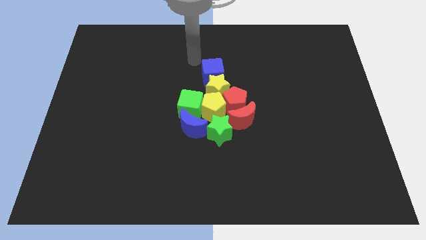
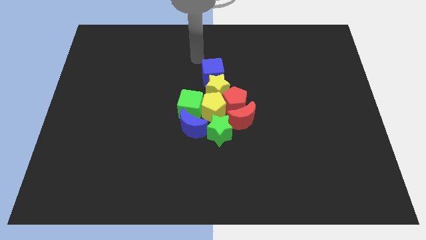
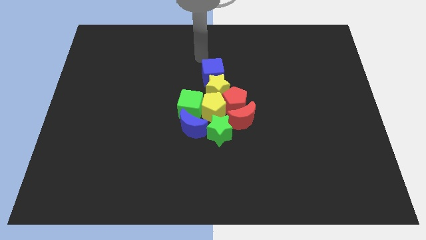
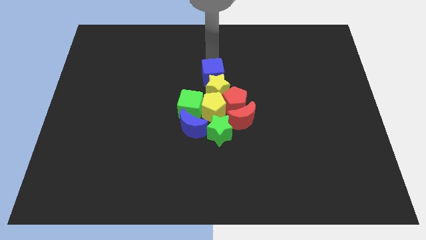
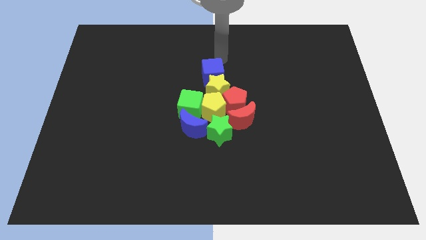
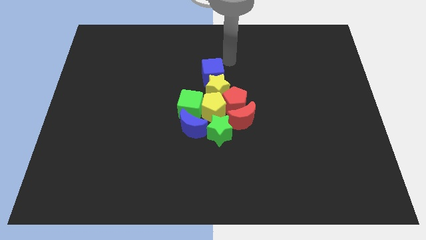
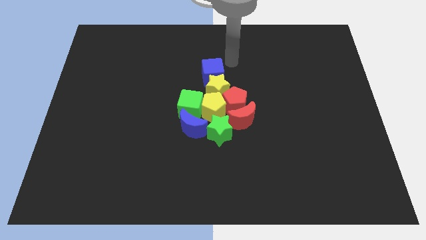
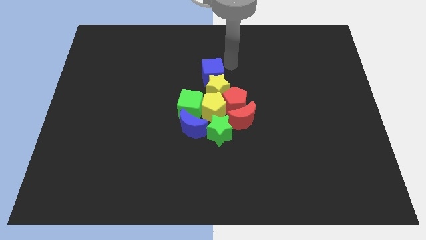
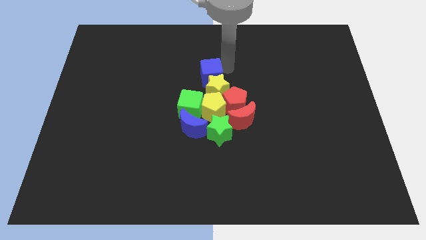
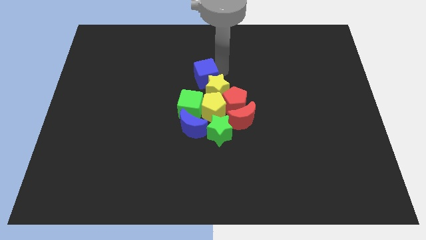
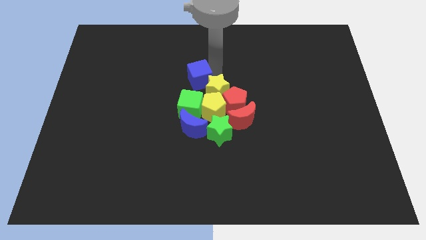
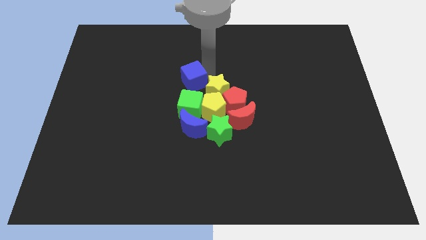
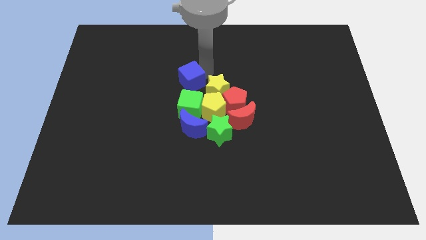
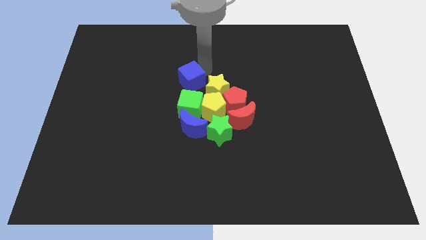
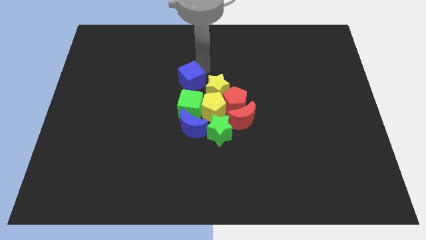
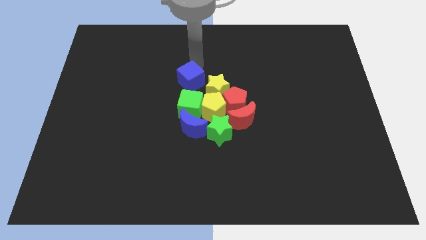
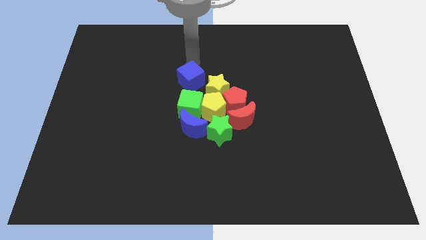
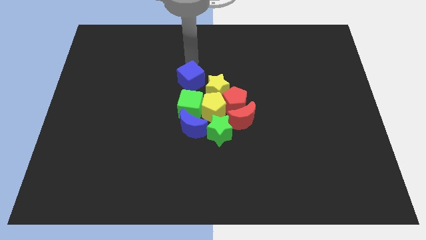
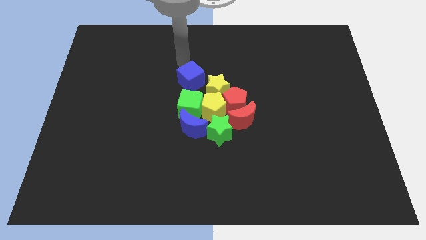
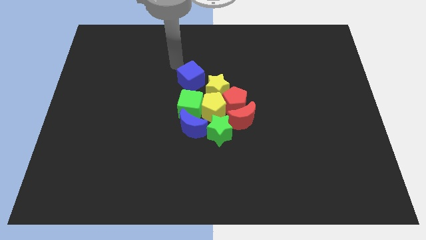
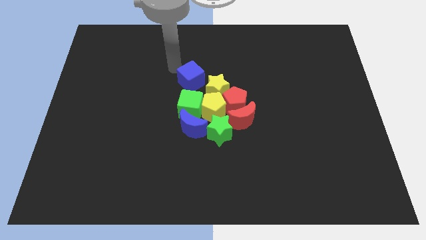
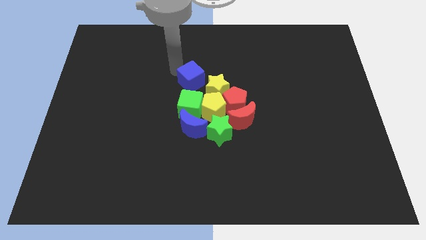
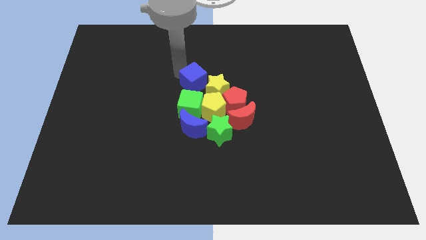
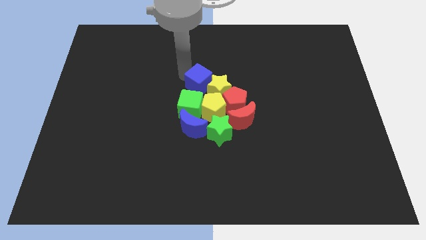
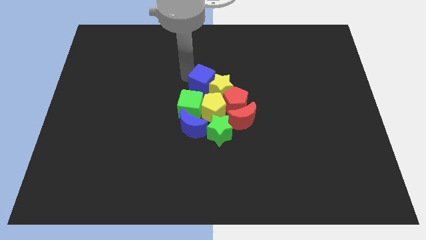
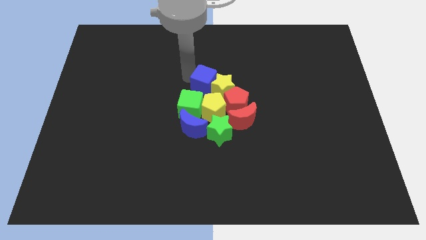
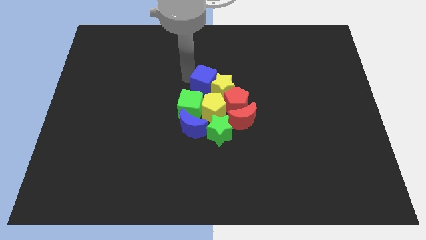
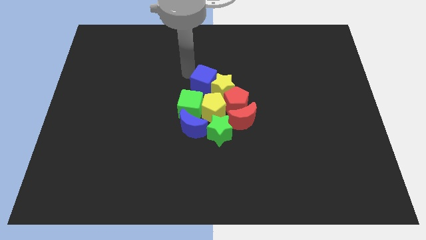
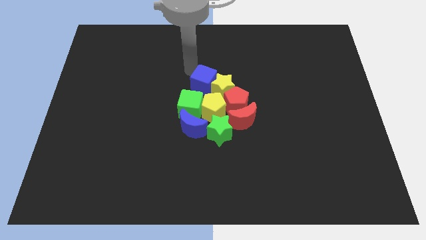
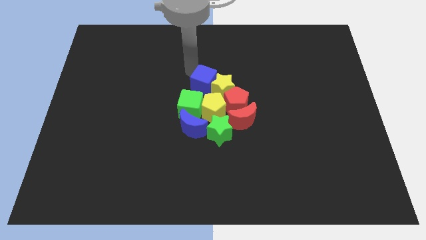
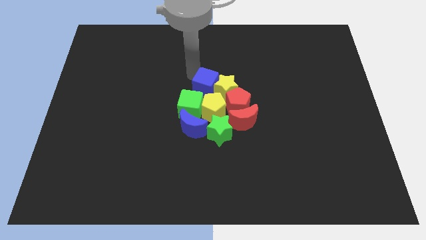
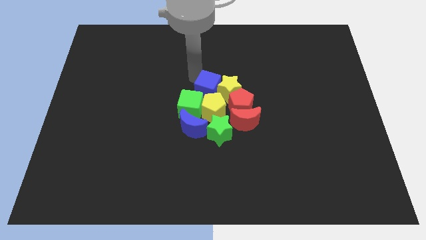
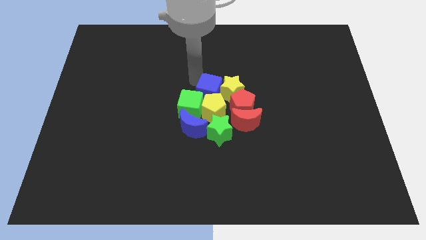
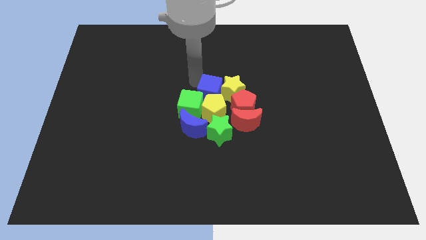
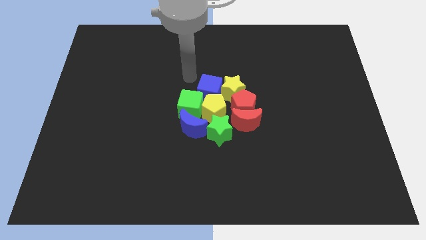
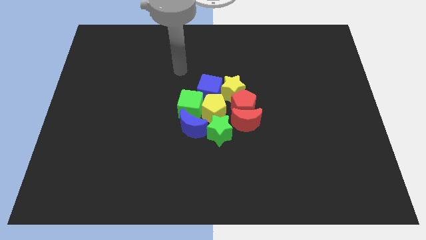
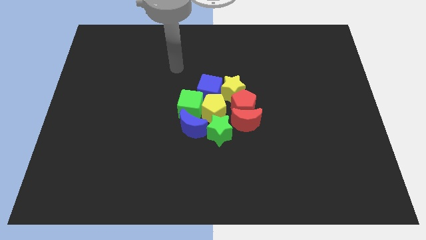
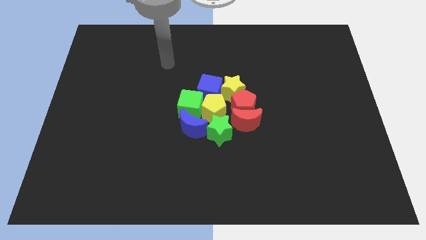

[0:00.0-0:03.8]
move group of objects to the center of the board

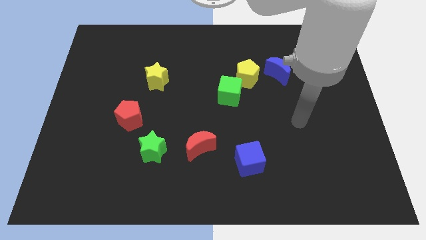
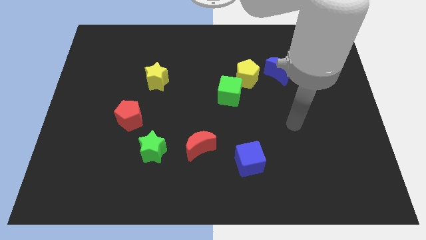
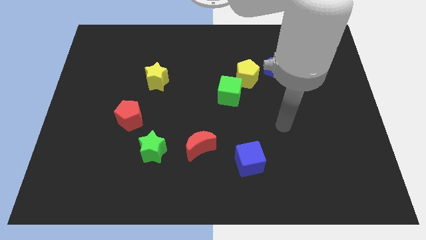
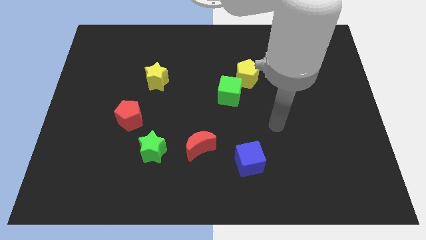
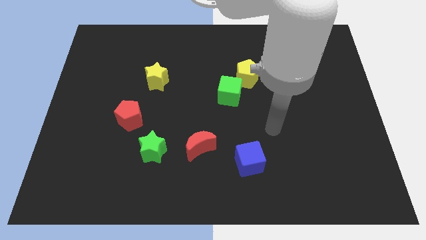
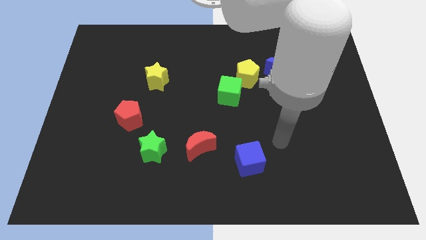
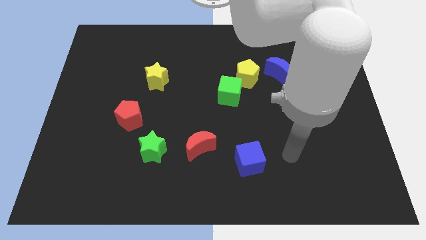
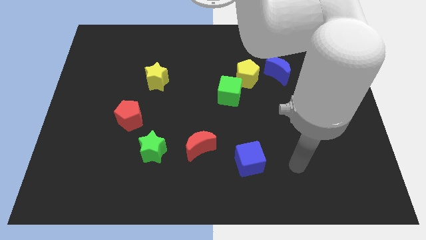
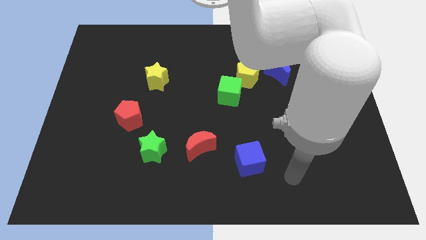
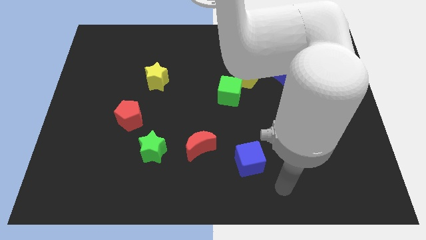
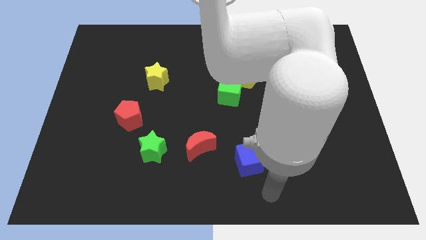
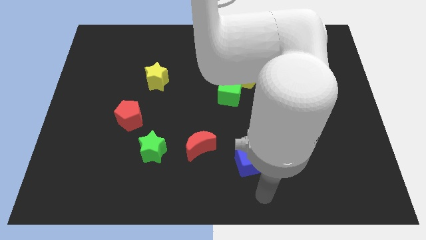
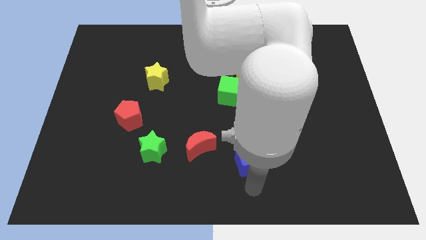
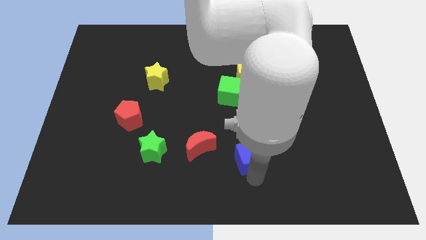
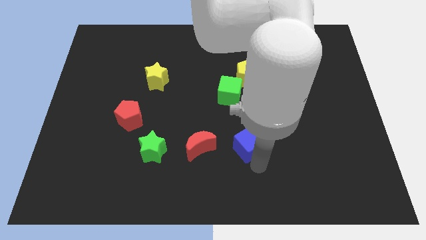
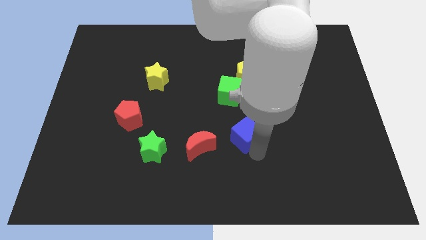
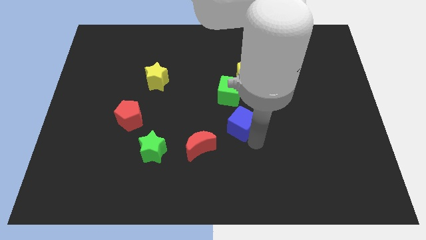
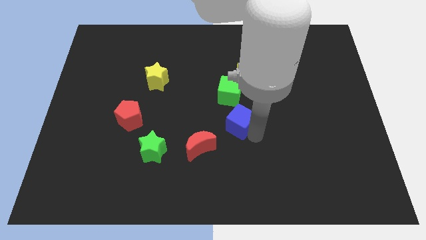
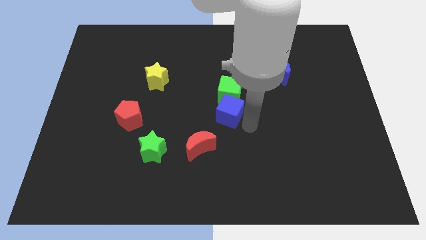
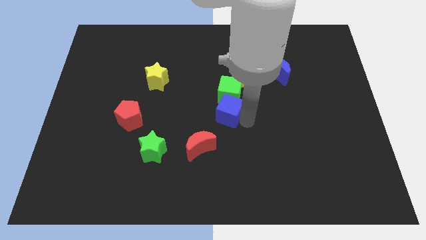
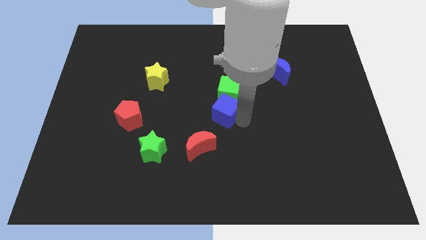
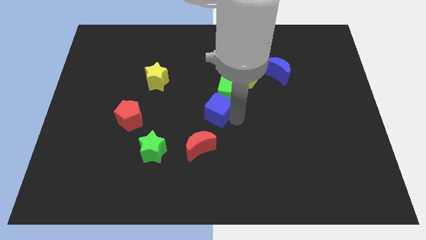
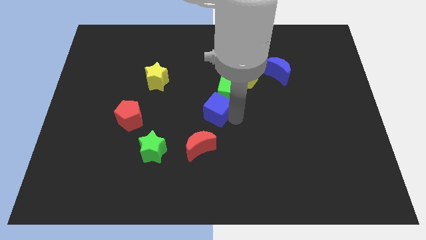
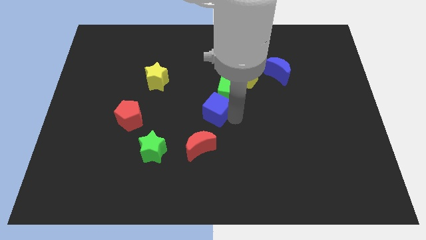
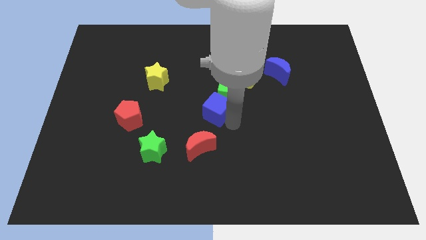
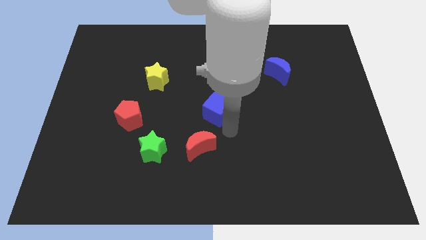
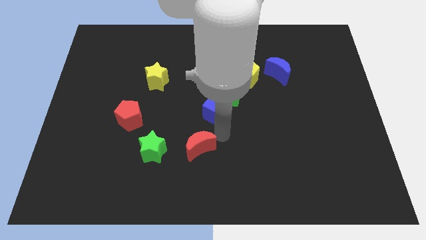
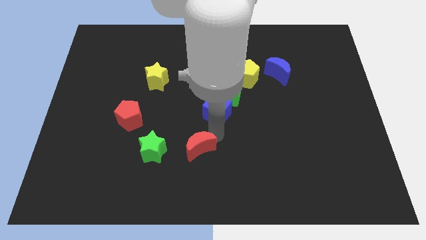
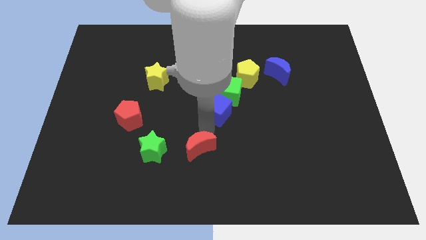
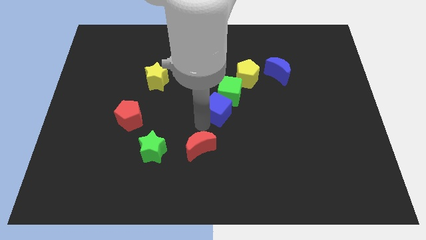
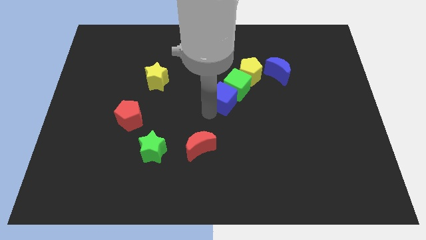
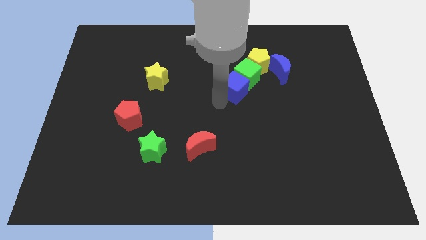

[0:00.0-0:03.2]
push the blue cube into the green cube

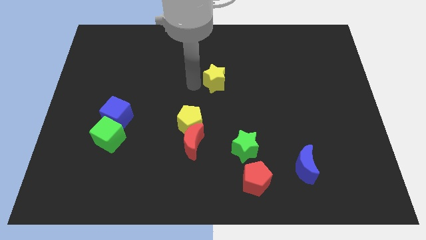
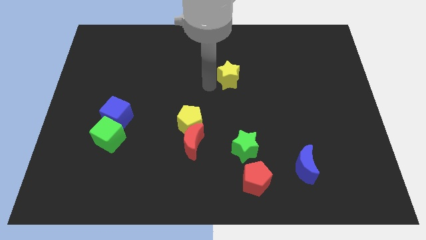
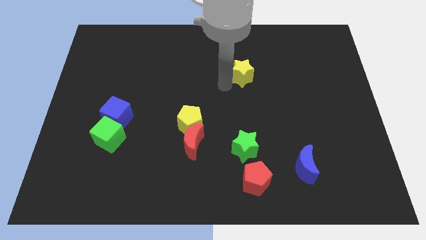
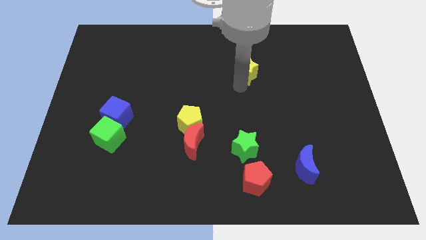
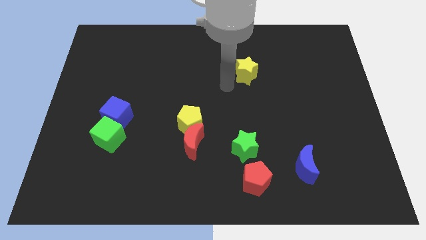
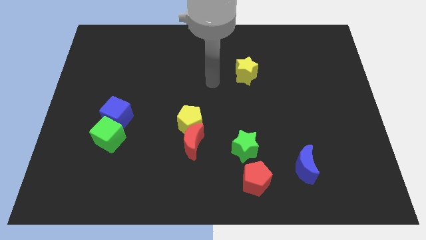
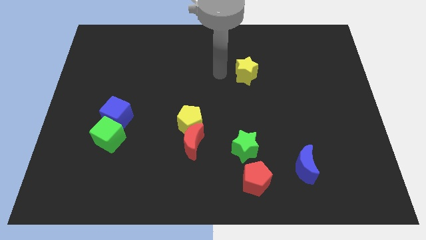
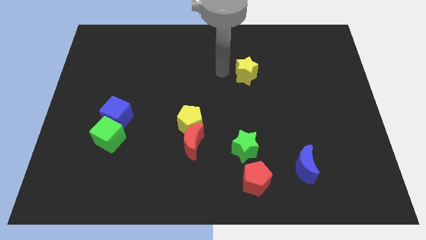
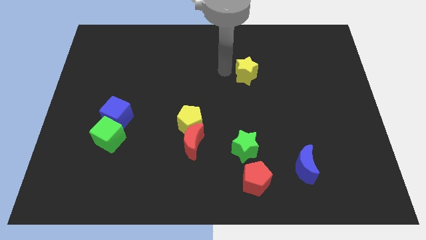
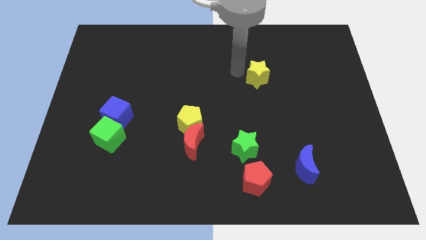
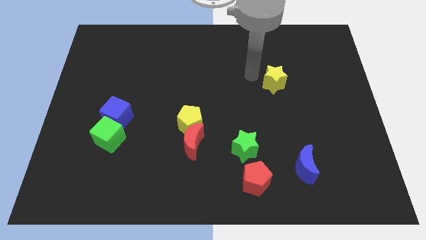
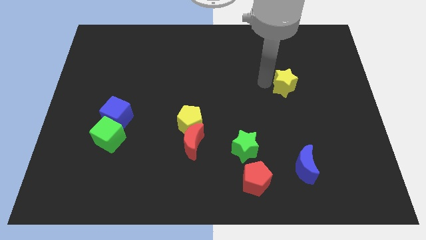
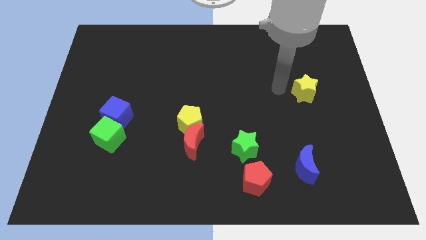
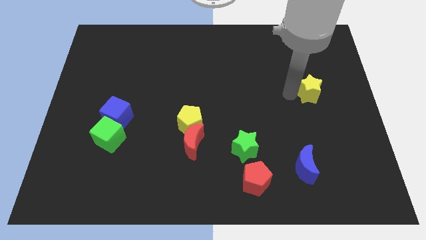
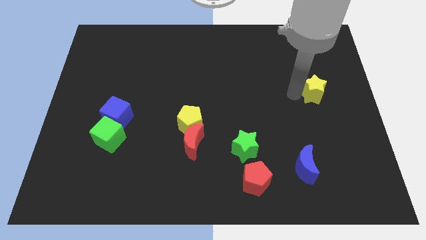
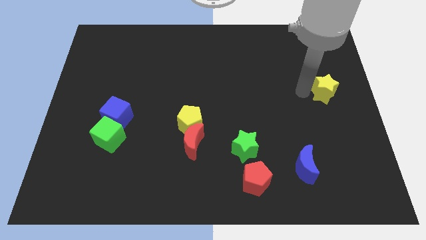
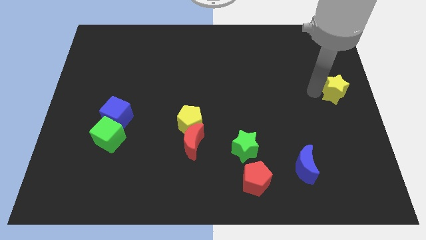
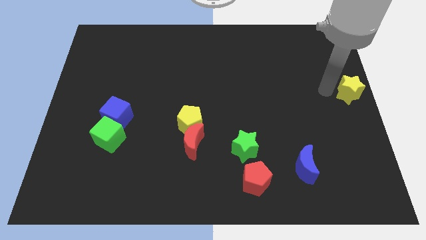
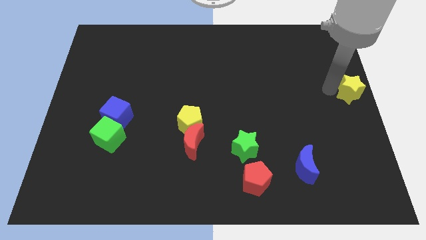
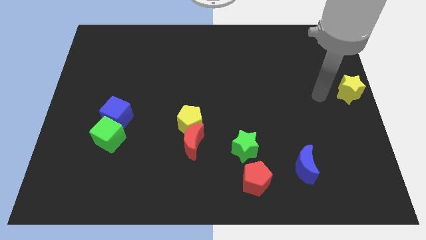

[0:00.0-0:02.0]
place the yellow star at the center right of the board
